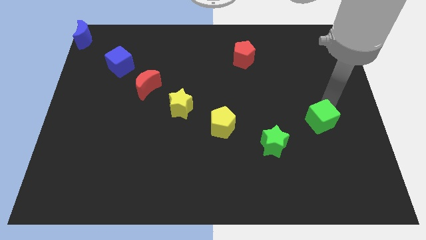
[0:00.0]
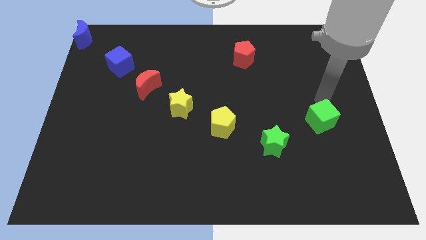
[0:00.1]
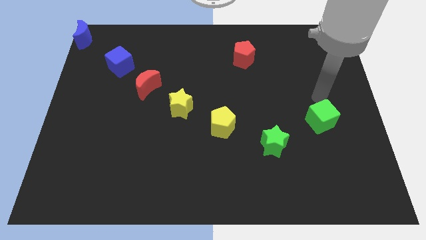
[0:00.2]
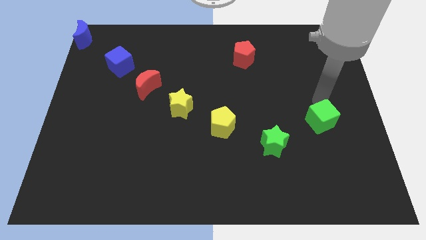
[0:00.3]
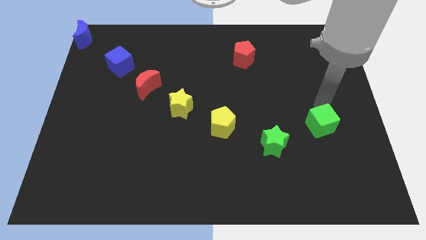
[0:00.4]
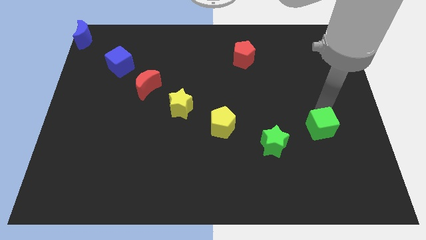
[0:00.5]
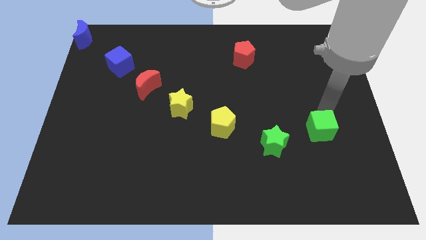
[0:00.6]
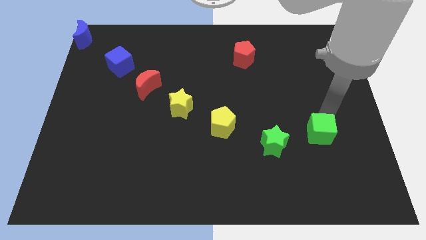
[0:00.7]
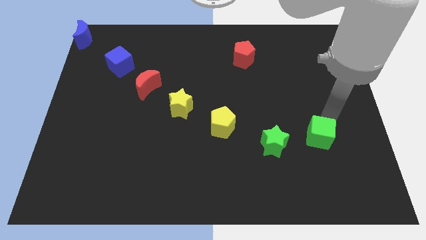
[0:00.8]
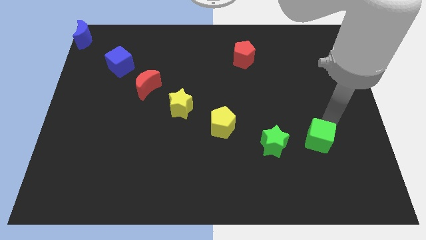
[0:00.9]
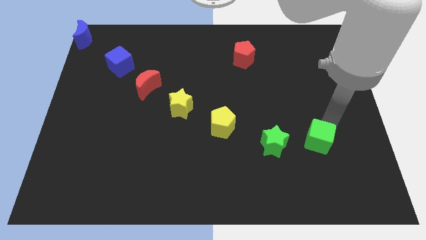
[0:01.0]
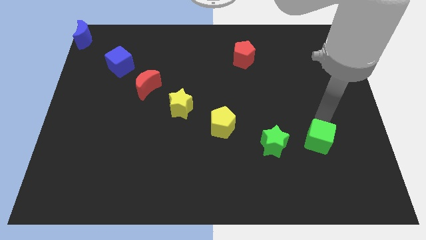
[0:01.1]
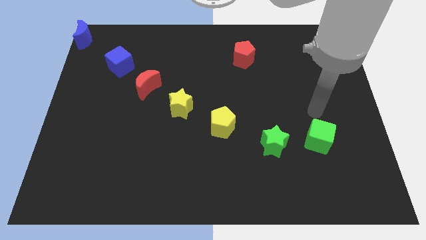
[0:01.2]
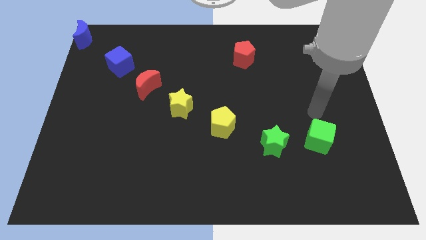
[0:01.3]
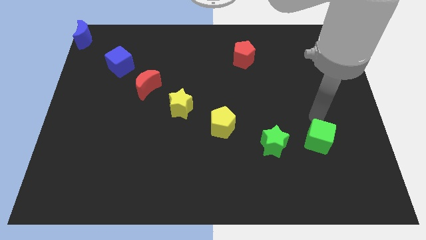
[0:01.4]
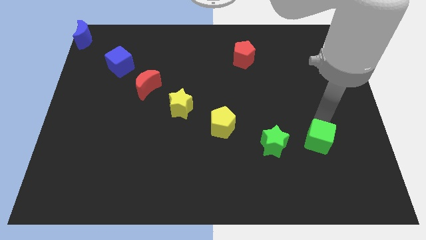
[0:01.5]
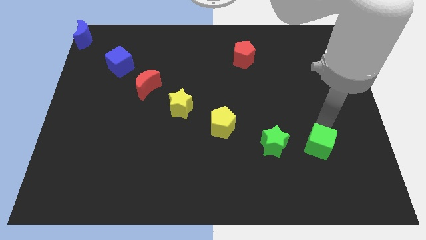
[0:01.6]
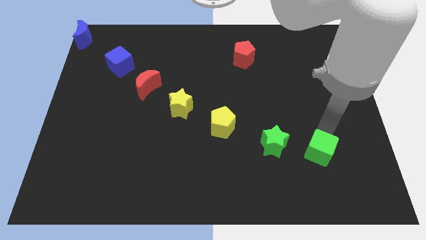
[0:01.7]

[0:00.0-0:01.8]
move the green cube right to the green star

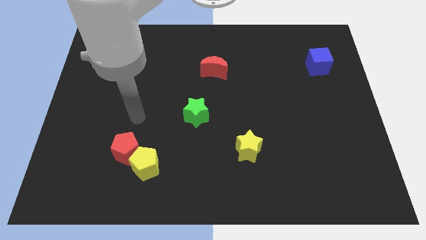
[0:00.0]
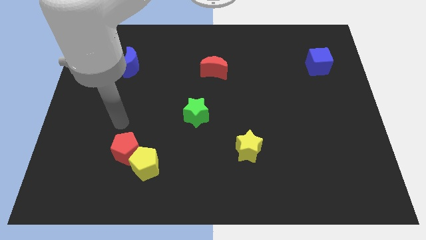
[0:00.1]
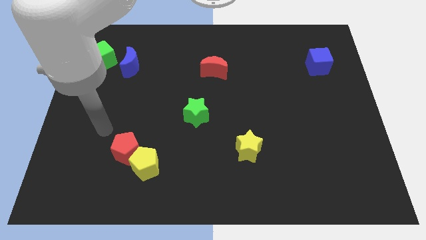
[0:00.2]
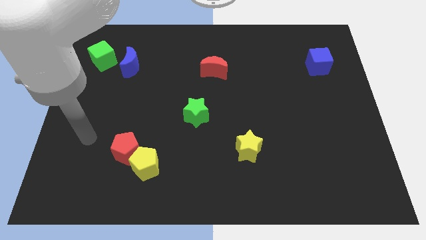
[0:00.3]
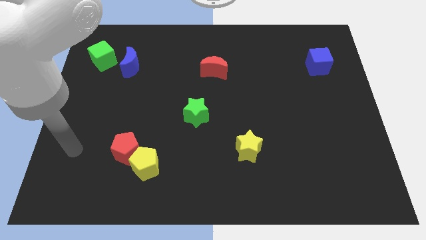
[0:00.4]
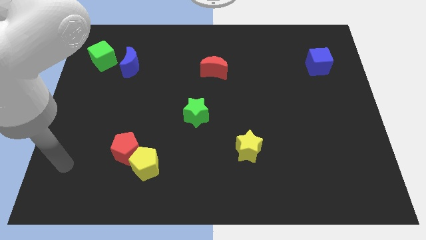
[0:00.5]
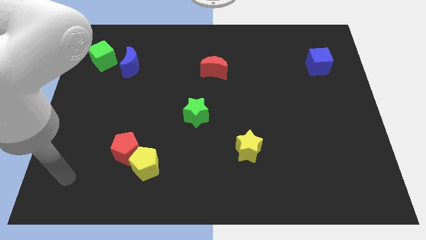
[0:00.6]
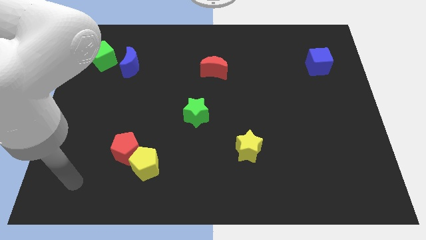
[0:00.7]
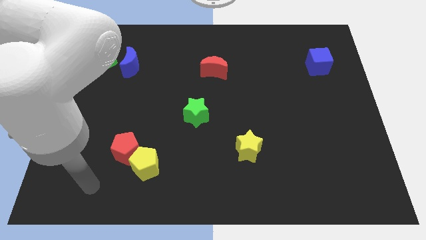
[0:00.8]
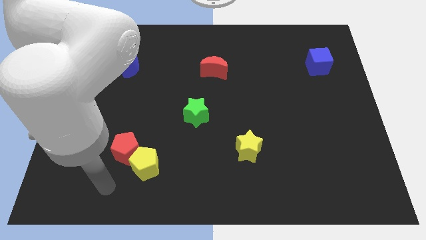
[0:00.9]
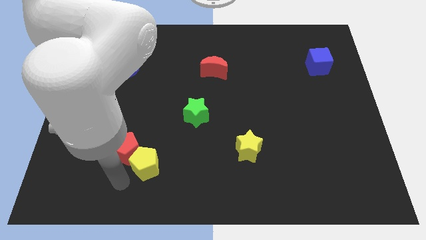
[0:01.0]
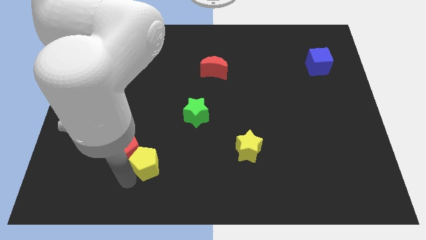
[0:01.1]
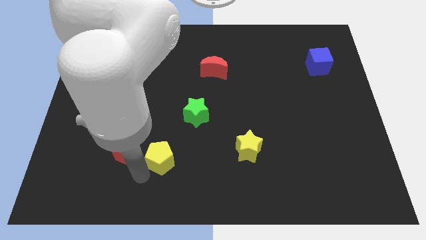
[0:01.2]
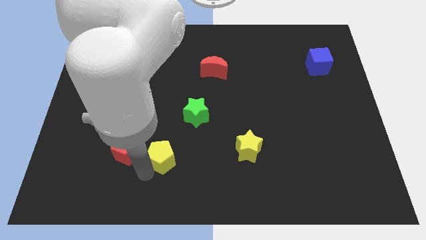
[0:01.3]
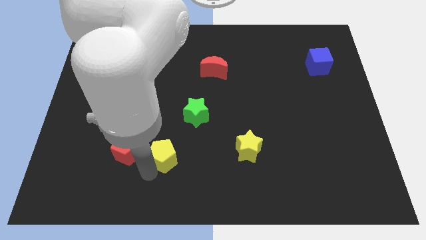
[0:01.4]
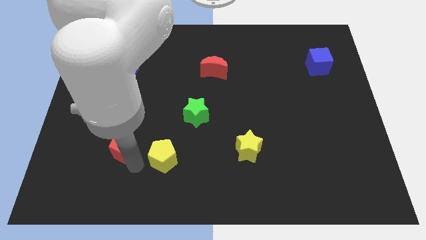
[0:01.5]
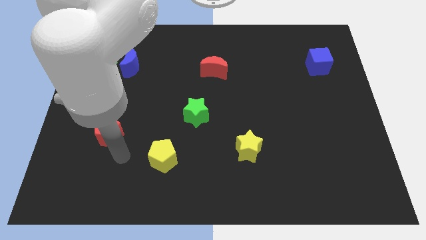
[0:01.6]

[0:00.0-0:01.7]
separate yellow pentagon and red pentagon

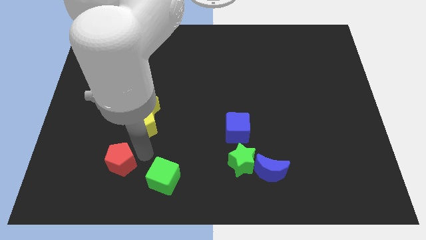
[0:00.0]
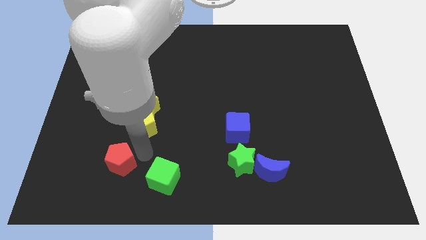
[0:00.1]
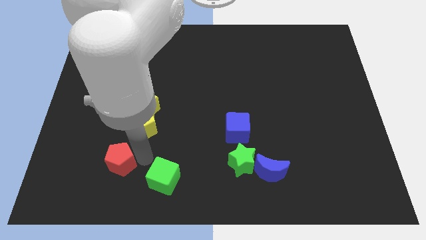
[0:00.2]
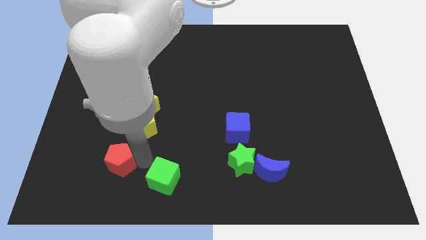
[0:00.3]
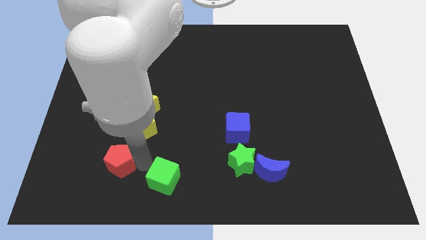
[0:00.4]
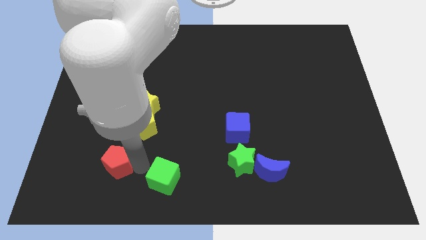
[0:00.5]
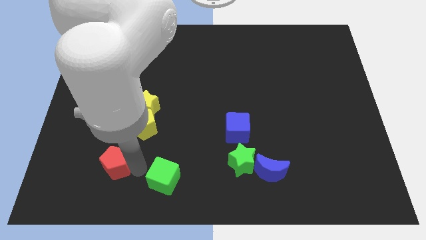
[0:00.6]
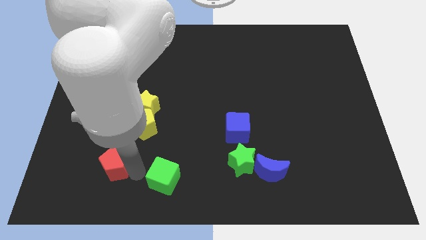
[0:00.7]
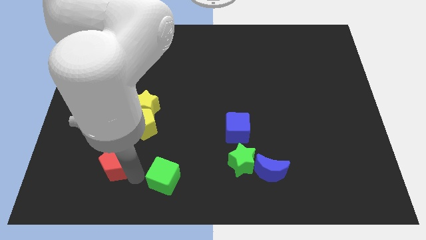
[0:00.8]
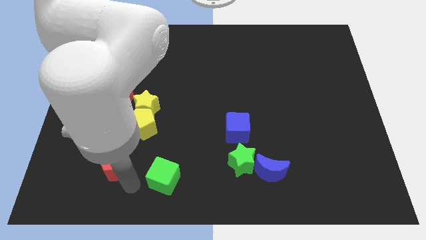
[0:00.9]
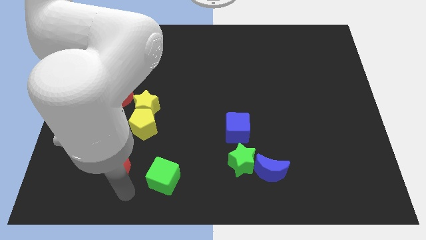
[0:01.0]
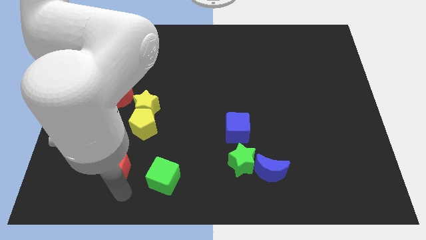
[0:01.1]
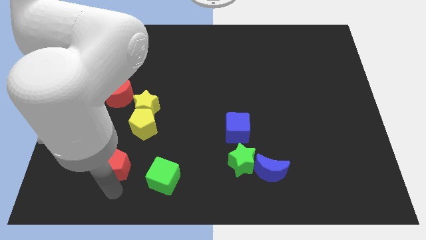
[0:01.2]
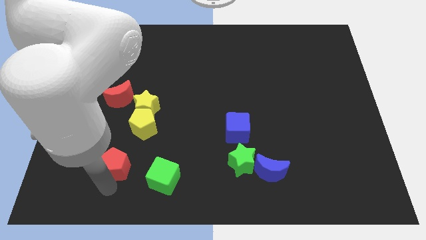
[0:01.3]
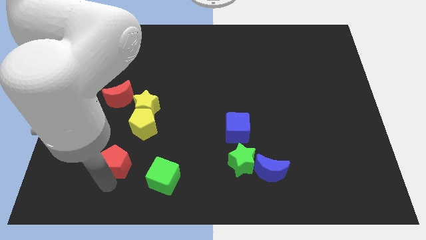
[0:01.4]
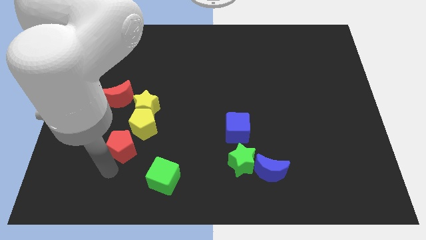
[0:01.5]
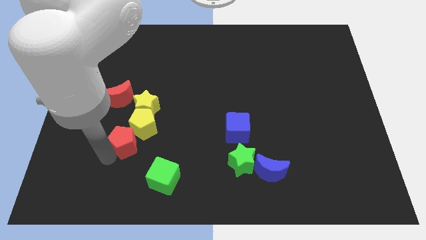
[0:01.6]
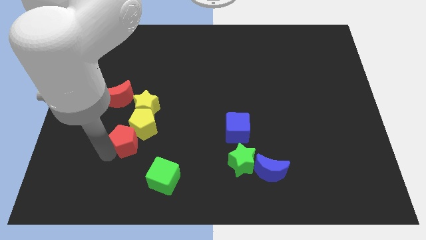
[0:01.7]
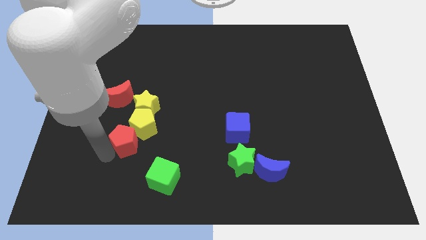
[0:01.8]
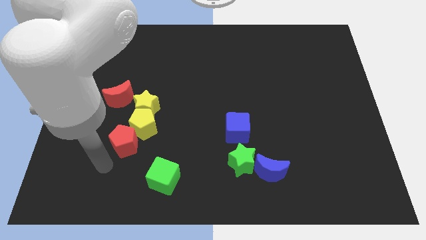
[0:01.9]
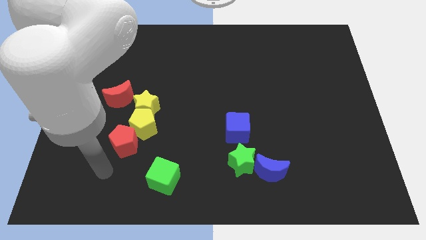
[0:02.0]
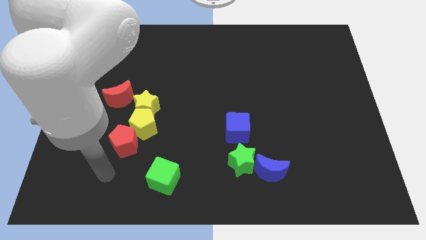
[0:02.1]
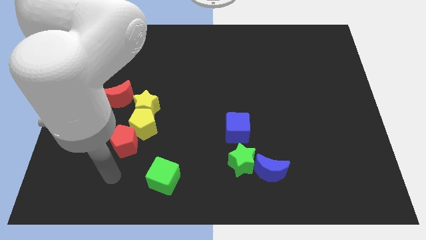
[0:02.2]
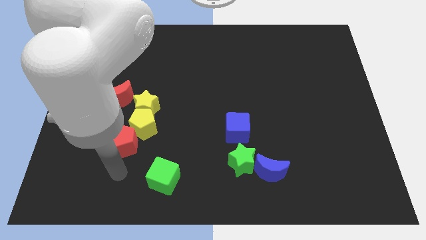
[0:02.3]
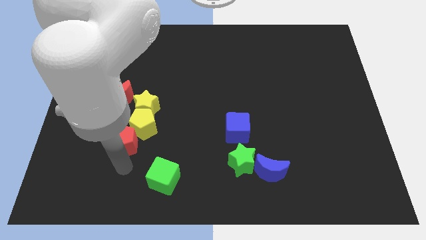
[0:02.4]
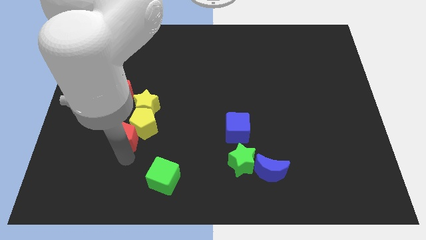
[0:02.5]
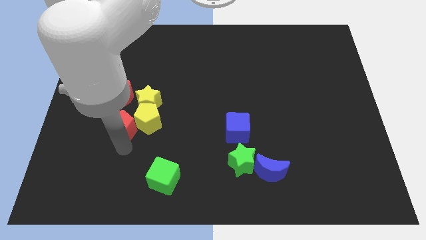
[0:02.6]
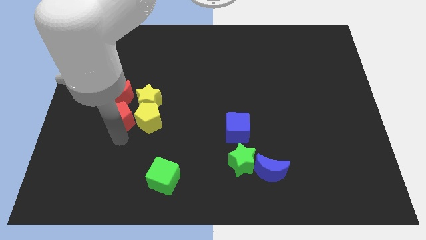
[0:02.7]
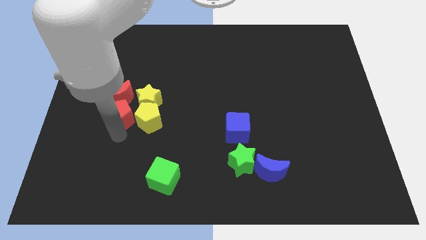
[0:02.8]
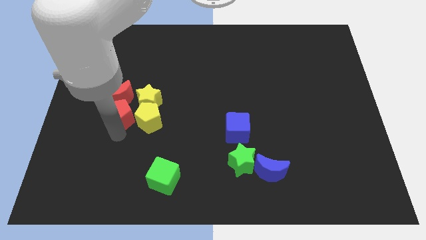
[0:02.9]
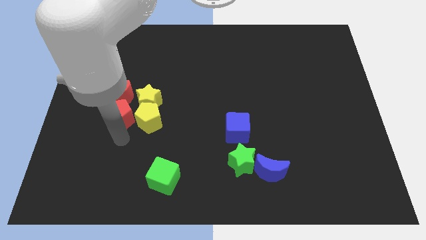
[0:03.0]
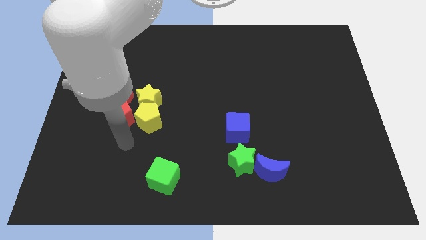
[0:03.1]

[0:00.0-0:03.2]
push red pentagon into red moon

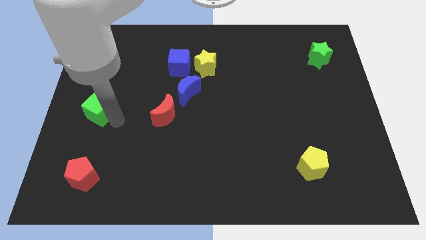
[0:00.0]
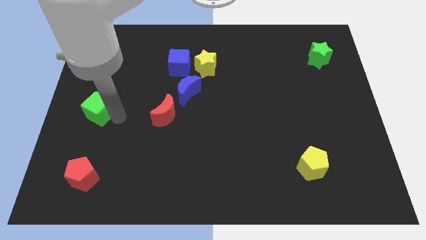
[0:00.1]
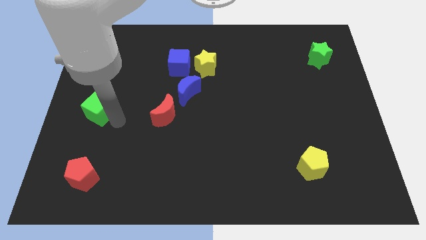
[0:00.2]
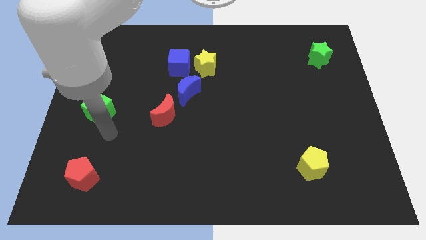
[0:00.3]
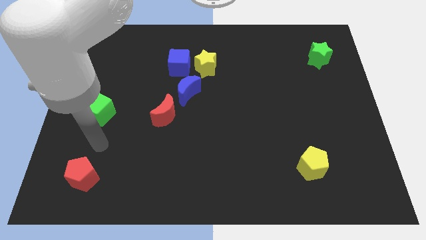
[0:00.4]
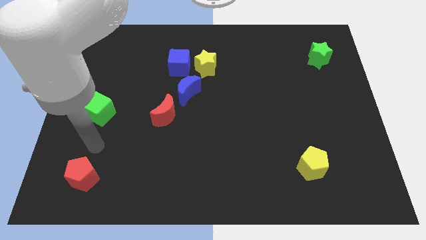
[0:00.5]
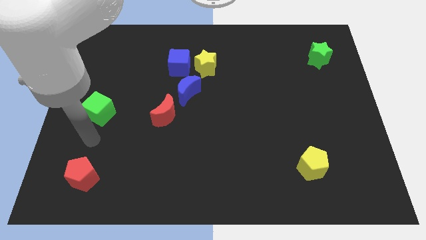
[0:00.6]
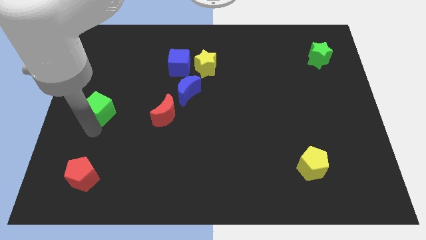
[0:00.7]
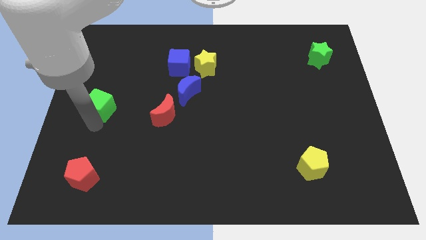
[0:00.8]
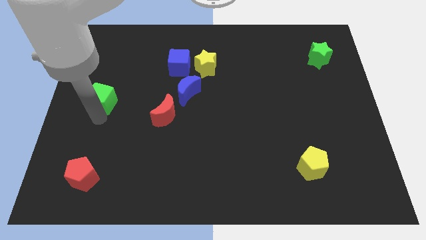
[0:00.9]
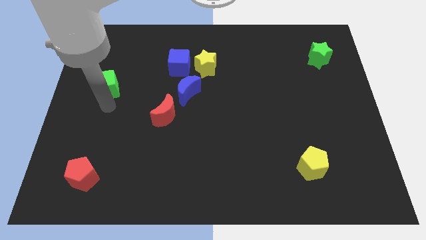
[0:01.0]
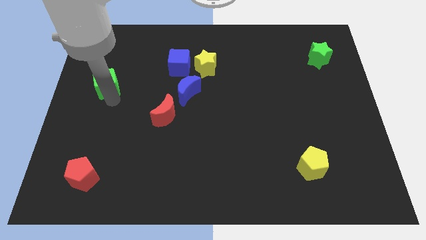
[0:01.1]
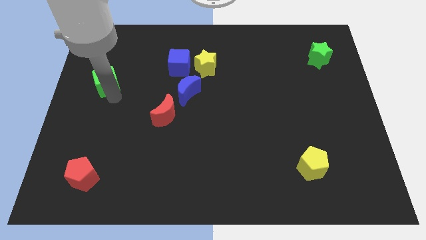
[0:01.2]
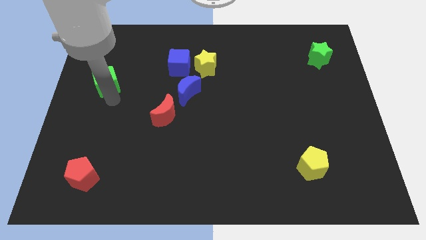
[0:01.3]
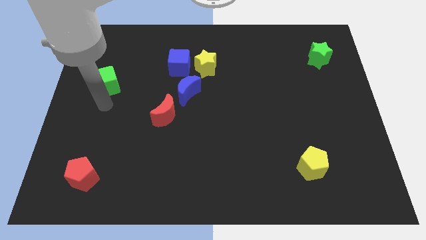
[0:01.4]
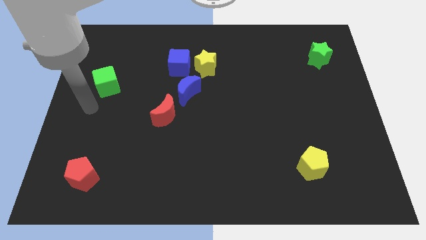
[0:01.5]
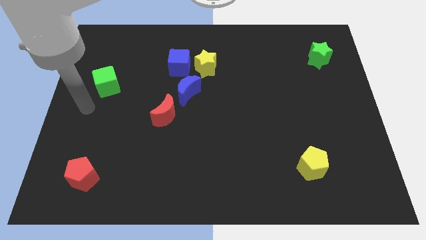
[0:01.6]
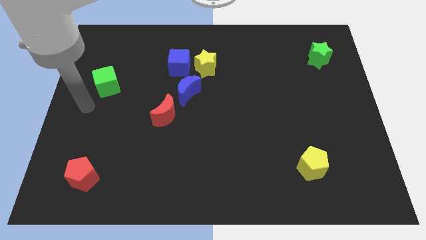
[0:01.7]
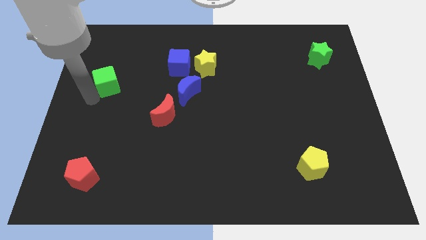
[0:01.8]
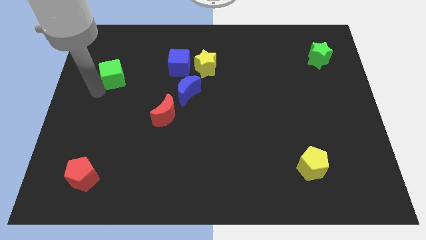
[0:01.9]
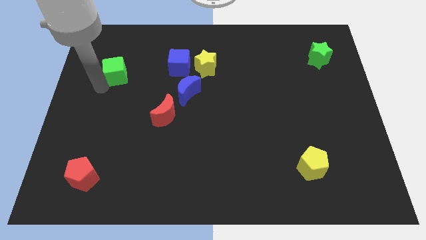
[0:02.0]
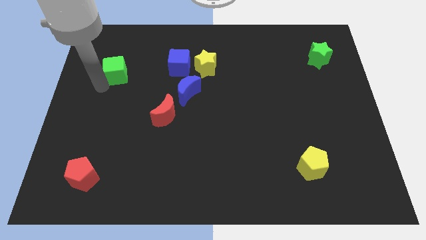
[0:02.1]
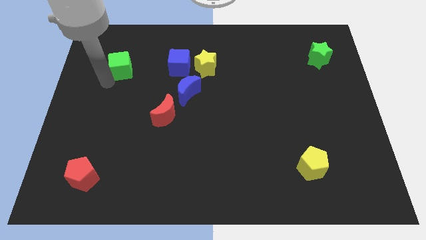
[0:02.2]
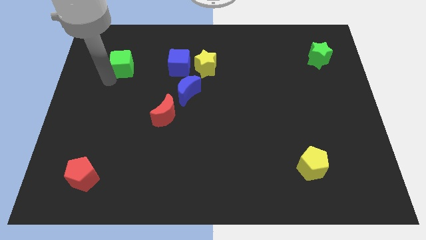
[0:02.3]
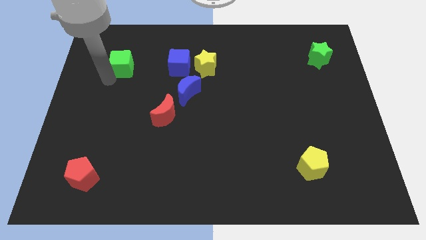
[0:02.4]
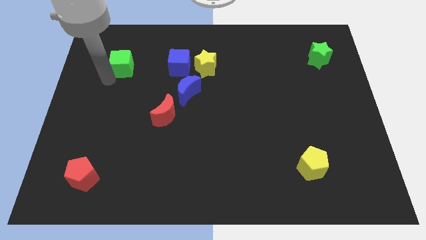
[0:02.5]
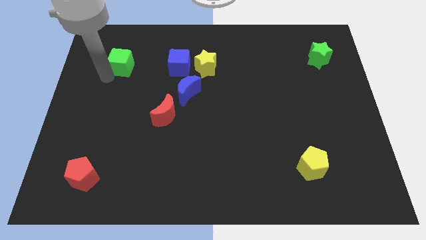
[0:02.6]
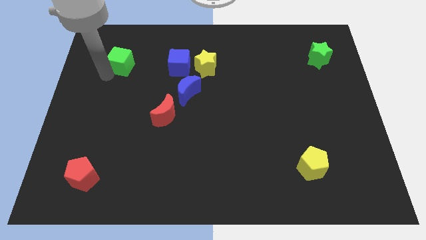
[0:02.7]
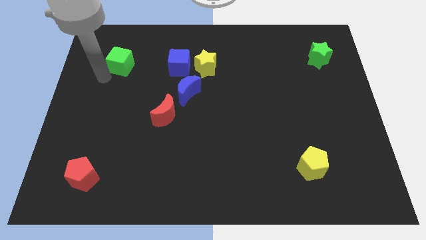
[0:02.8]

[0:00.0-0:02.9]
move the green cube left to the blue cube
